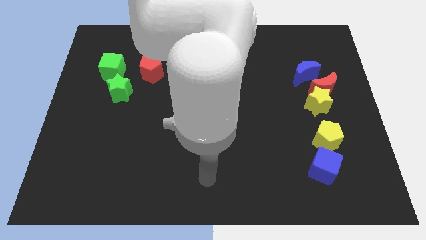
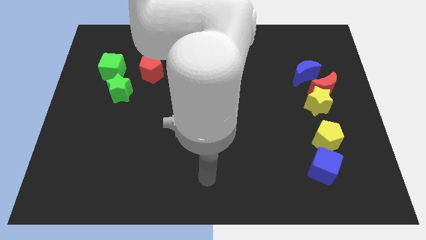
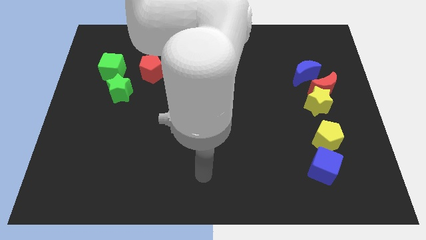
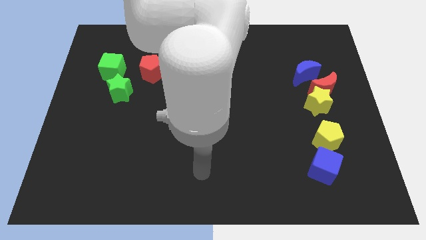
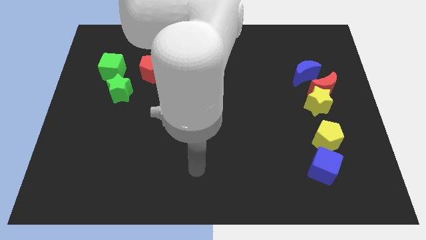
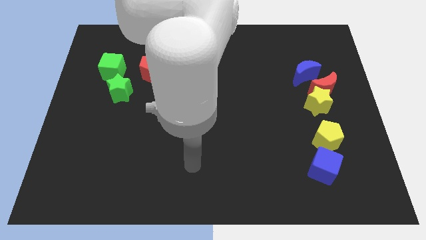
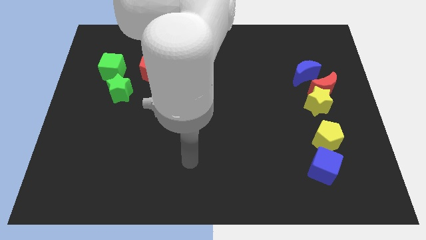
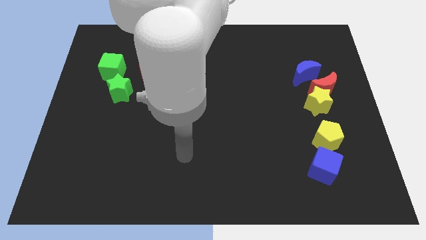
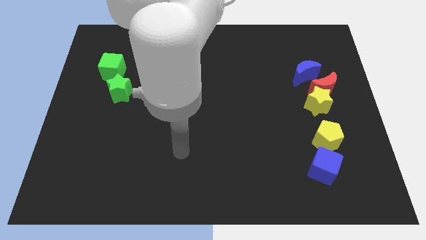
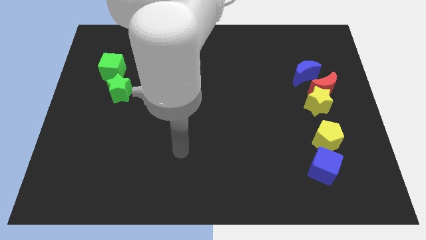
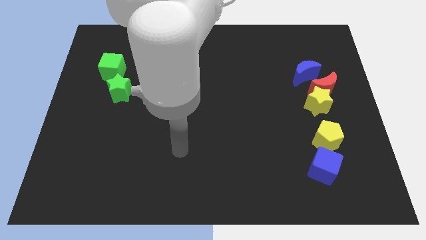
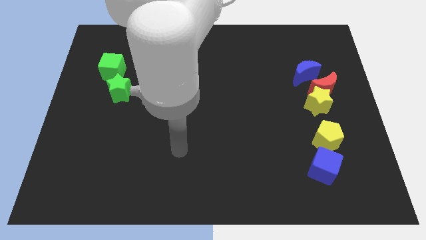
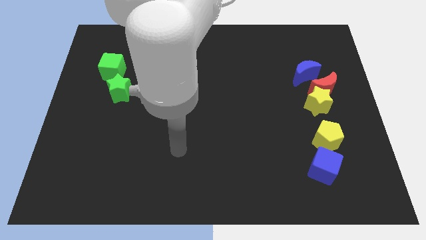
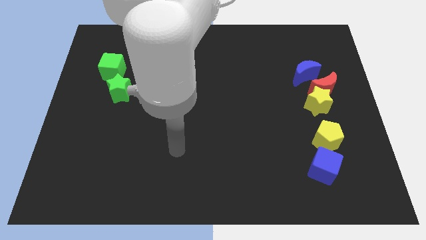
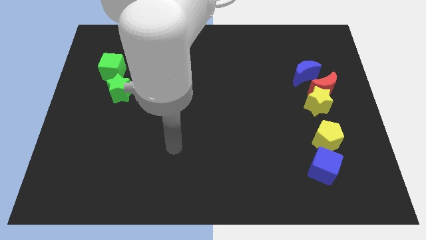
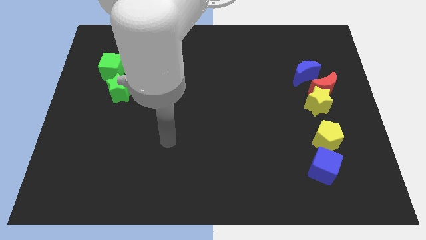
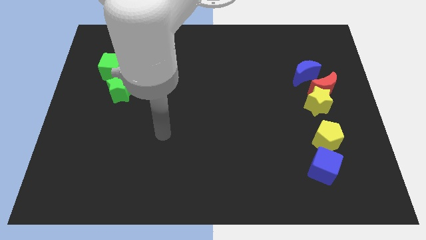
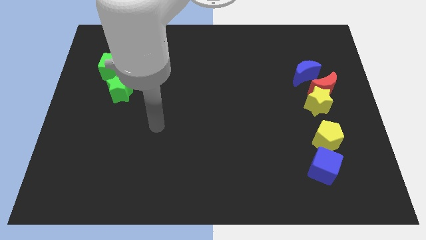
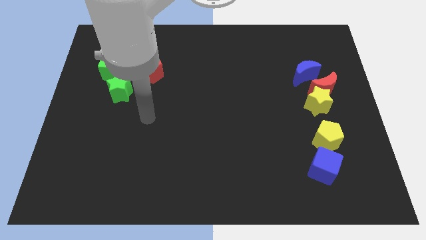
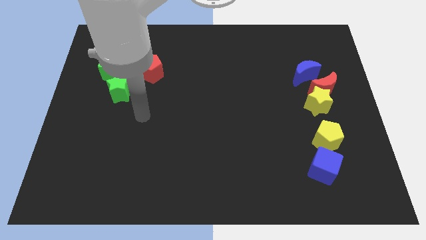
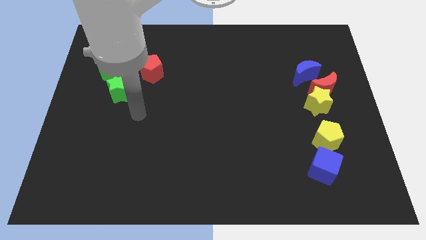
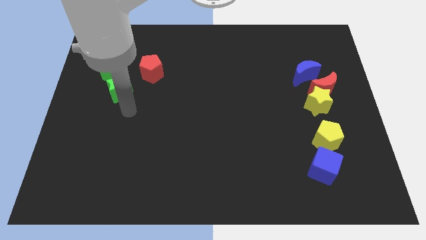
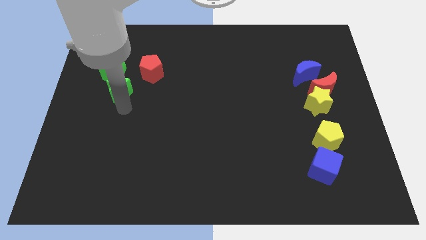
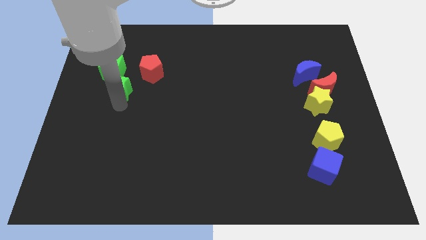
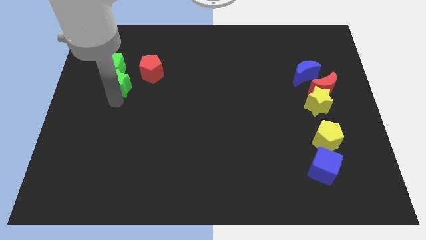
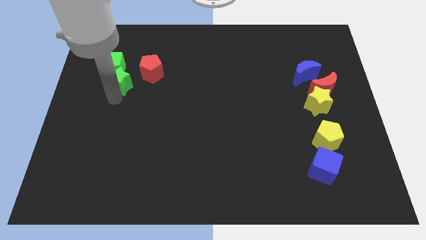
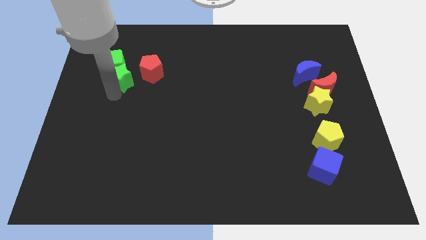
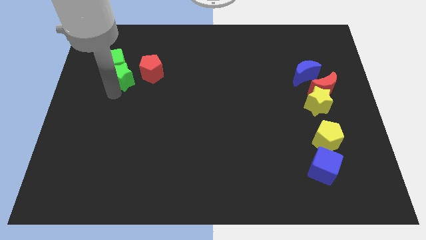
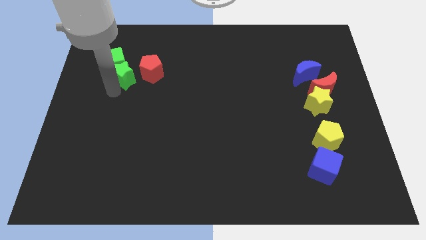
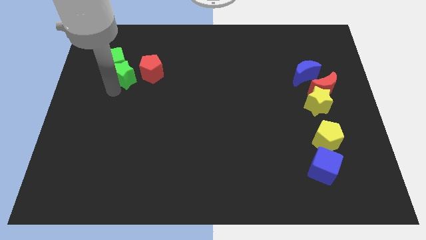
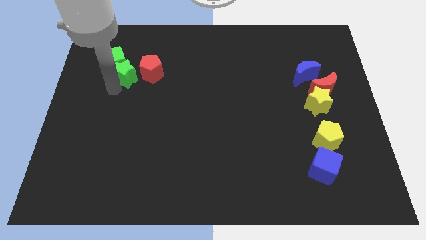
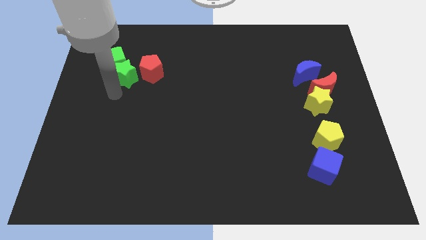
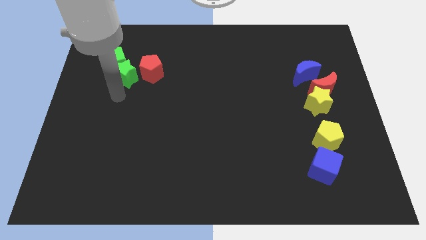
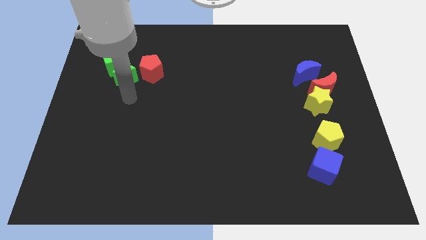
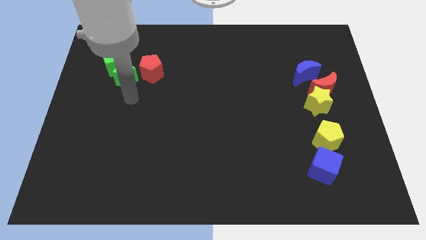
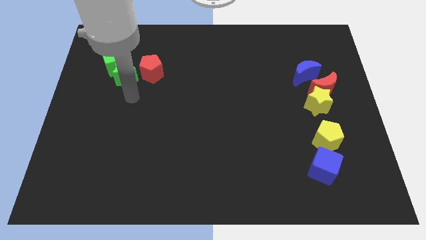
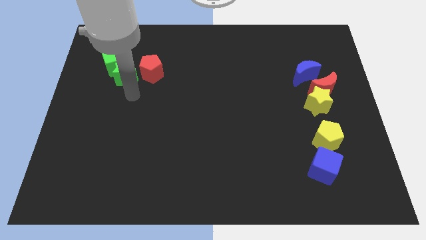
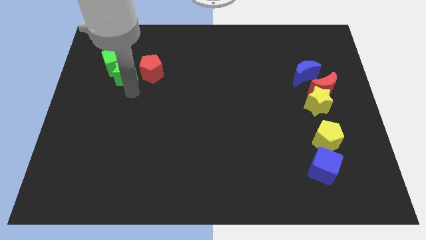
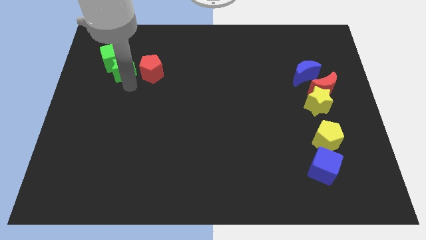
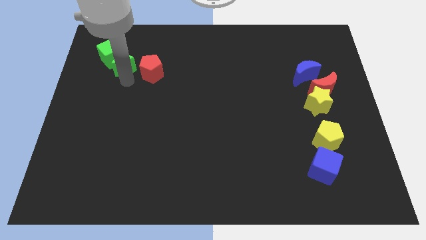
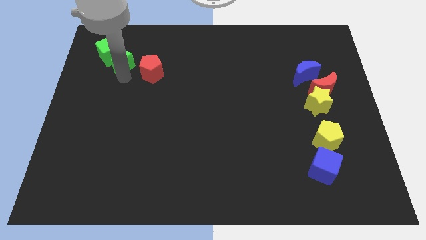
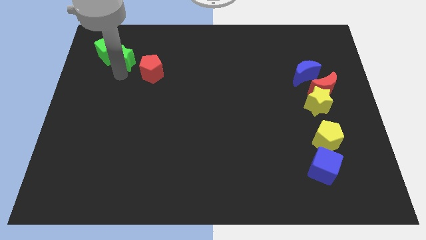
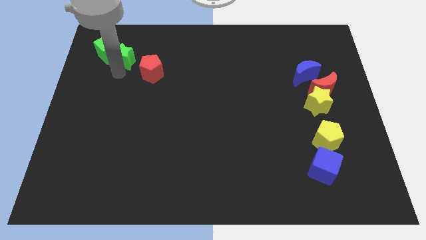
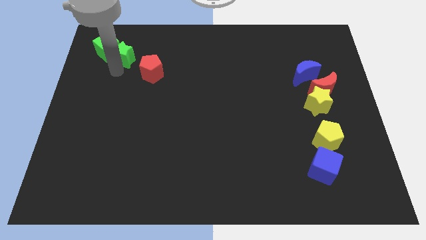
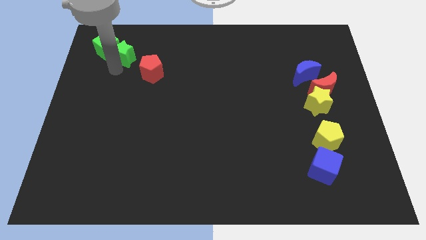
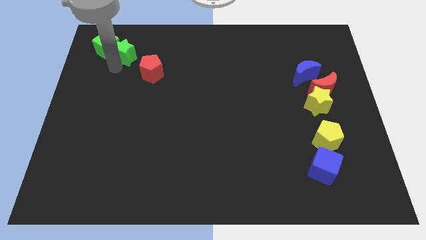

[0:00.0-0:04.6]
push the green blocks to the top left of the board

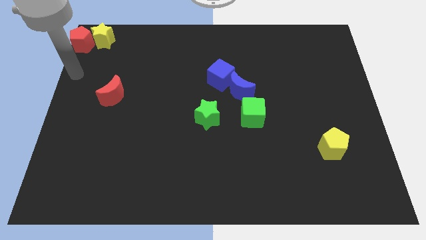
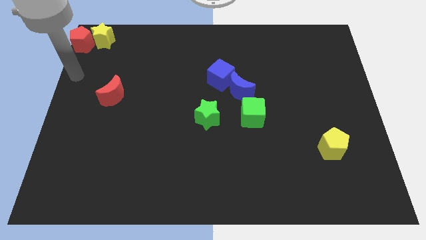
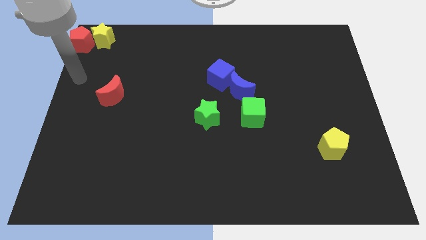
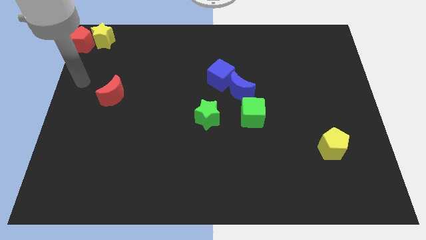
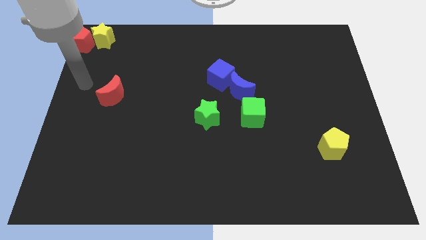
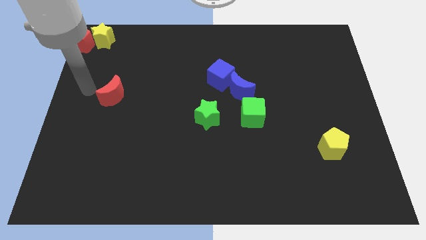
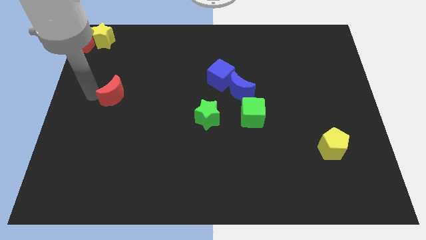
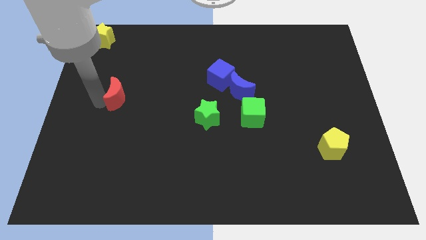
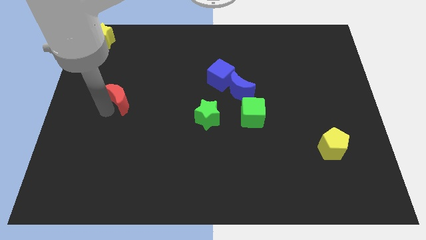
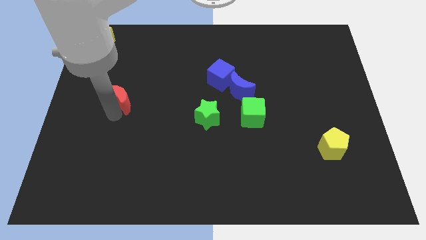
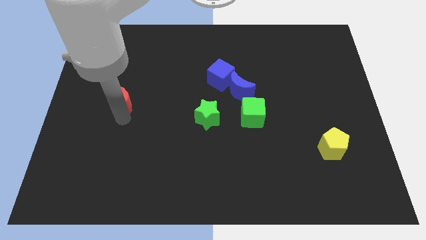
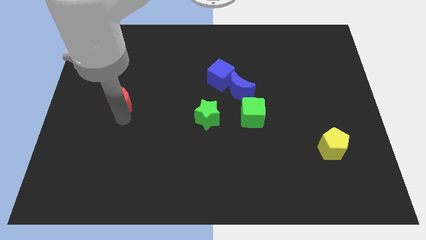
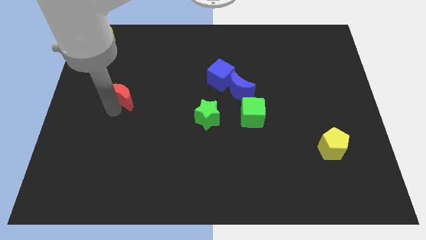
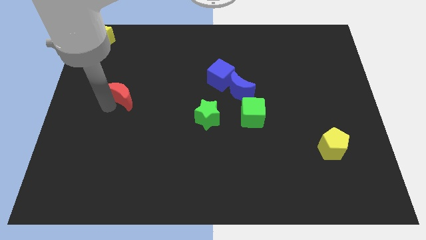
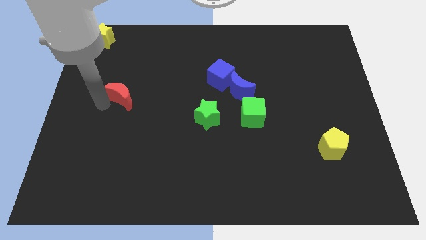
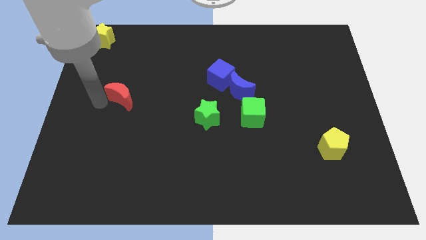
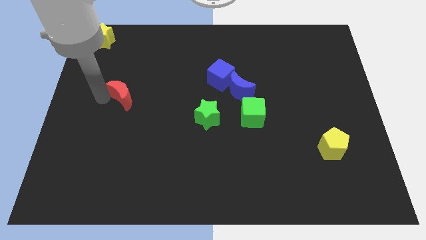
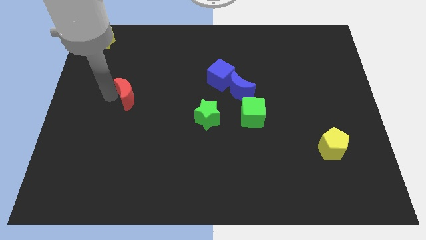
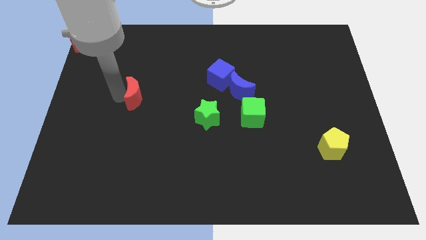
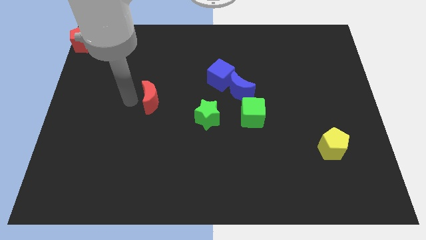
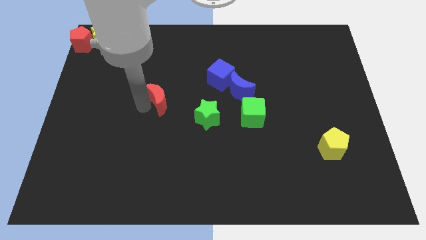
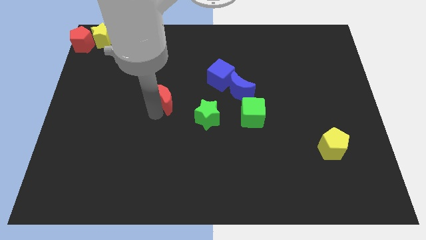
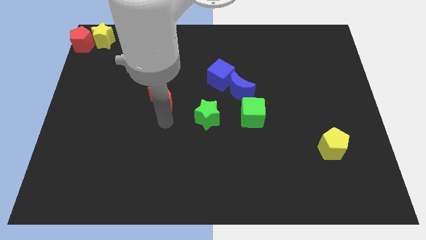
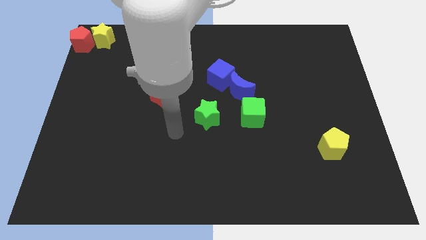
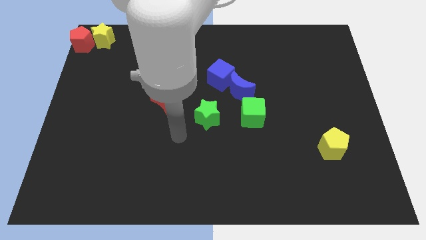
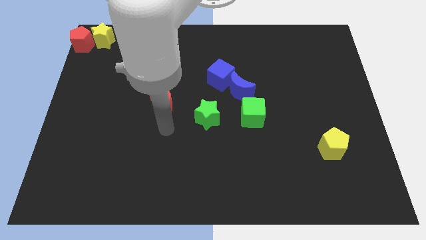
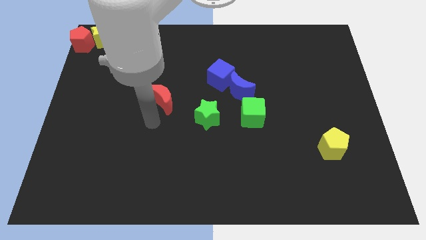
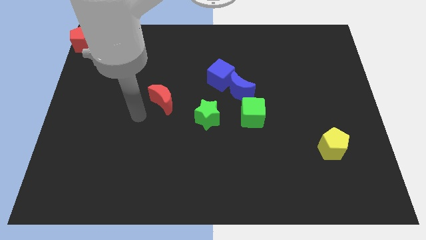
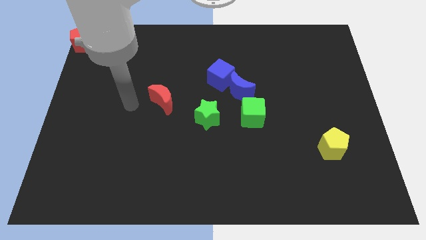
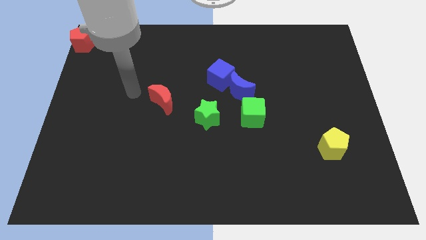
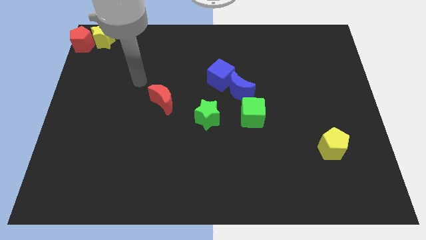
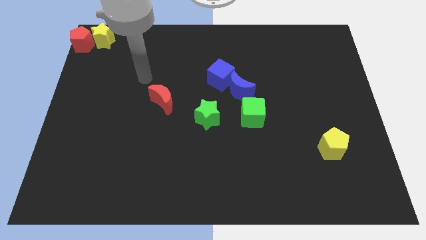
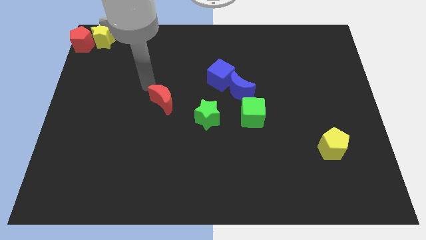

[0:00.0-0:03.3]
push the red crescent towards the green star

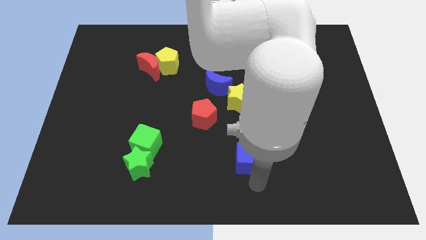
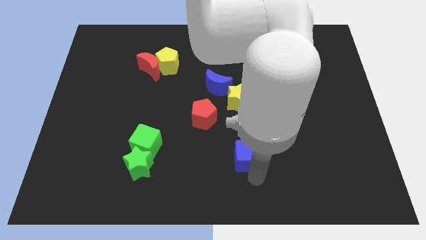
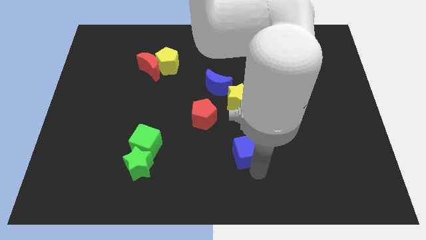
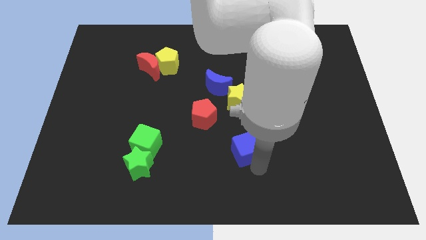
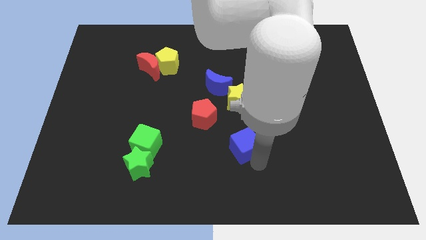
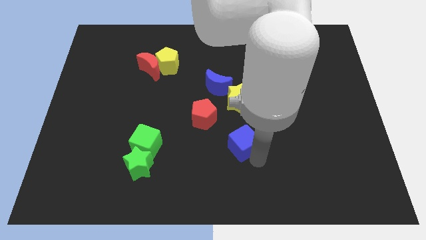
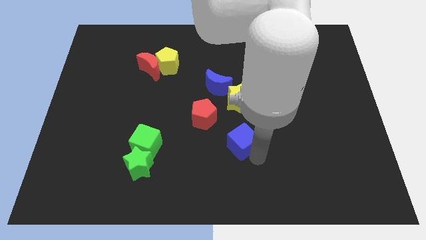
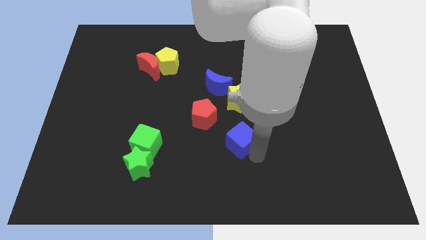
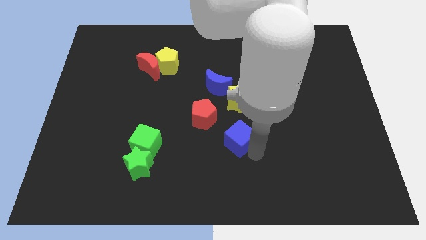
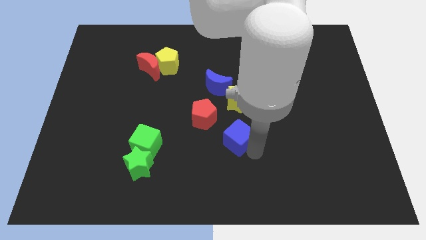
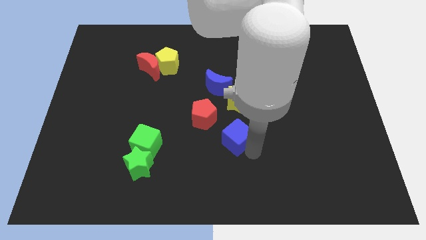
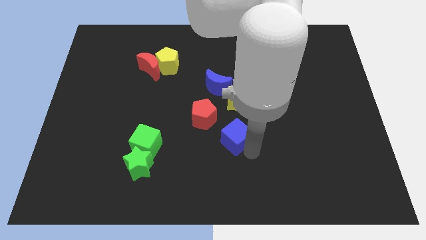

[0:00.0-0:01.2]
push the blue cube below the yellow star
